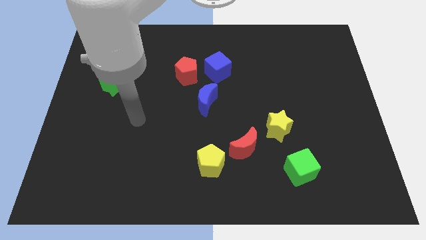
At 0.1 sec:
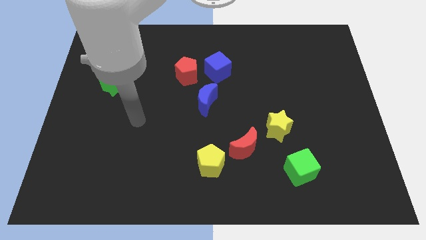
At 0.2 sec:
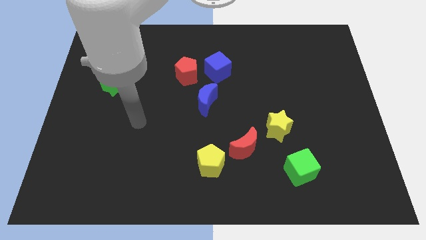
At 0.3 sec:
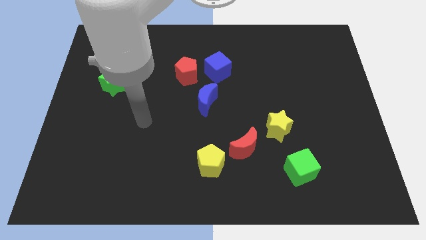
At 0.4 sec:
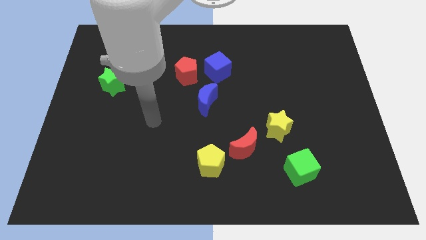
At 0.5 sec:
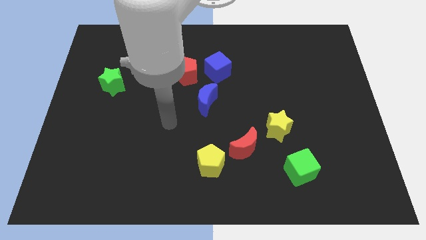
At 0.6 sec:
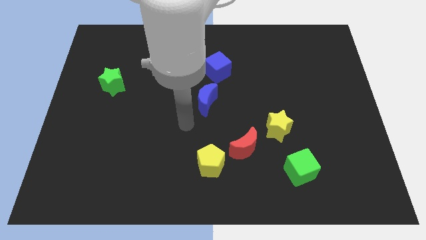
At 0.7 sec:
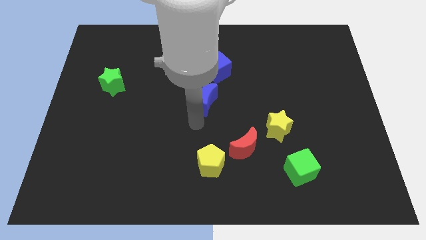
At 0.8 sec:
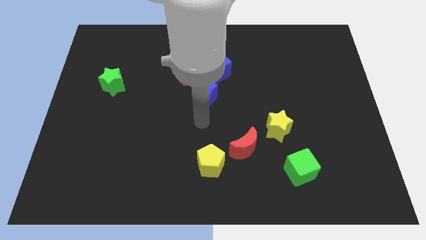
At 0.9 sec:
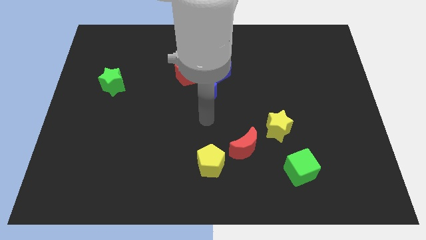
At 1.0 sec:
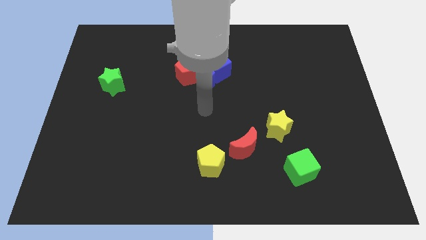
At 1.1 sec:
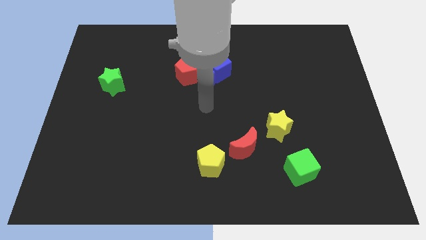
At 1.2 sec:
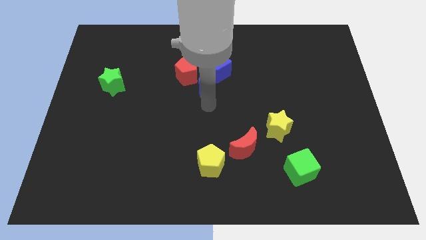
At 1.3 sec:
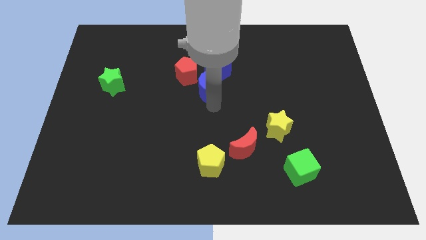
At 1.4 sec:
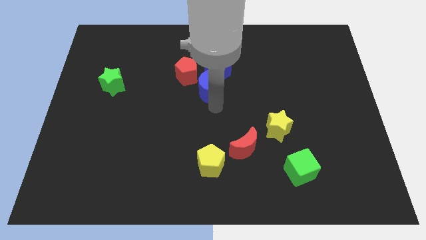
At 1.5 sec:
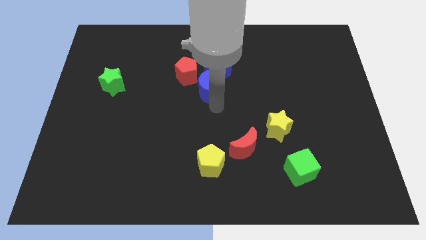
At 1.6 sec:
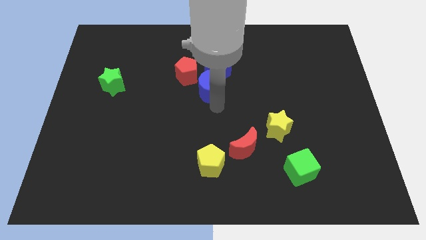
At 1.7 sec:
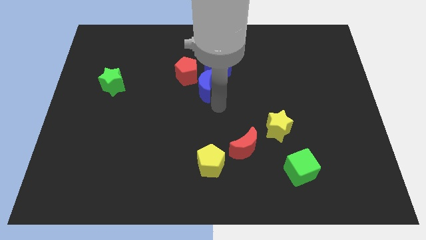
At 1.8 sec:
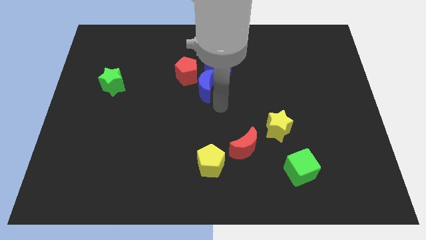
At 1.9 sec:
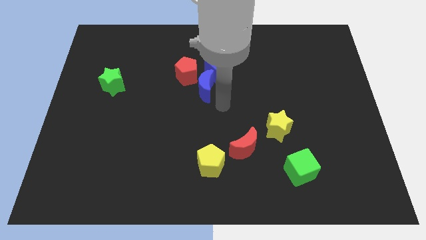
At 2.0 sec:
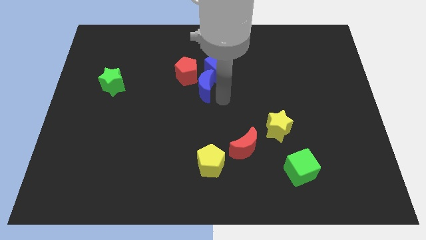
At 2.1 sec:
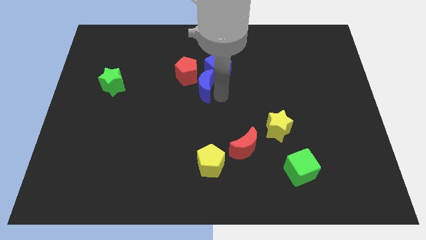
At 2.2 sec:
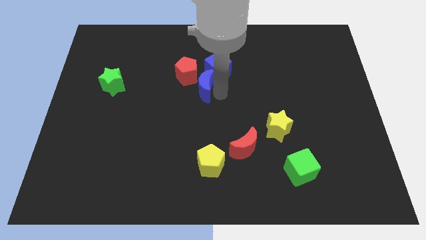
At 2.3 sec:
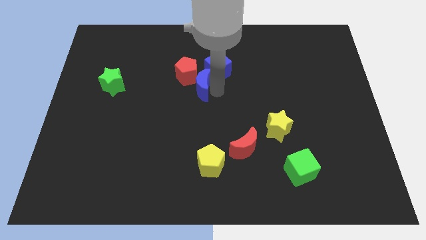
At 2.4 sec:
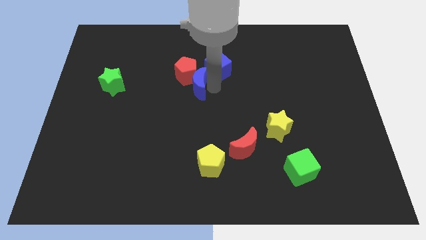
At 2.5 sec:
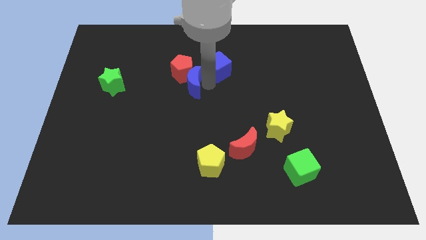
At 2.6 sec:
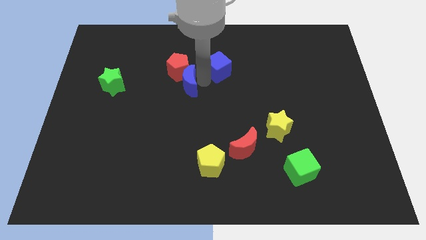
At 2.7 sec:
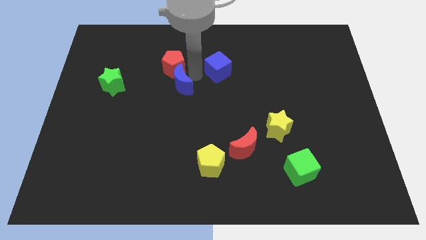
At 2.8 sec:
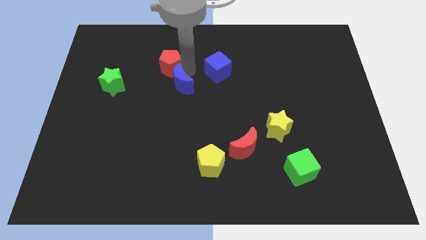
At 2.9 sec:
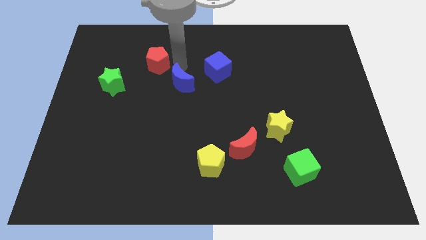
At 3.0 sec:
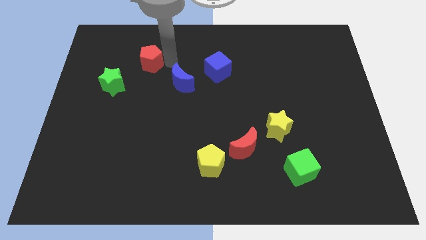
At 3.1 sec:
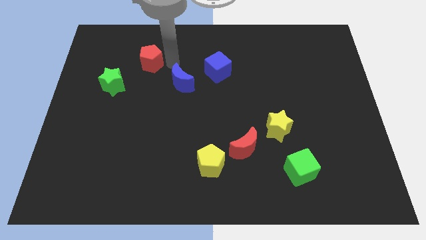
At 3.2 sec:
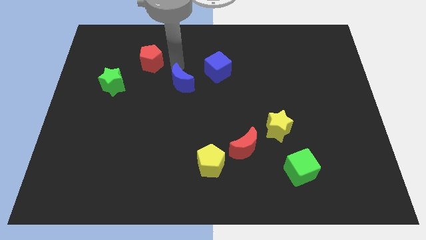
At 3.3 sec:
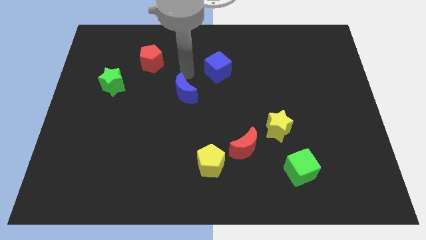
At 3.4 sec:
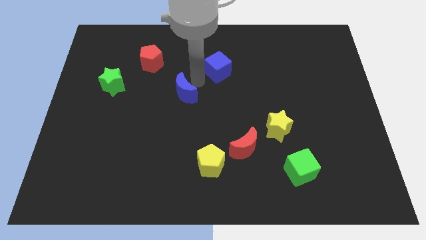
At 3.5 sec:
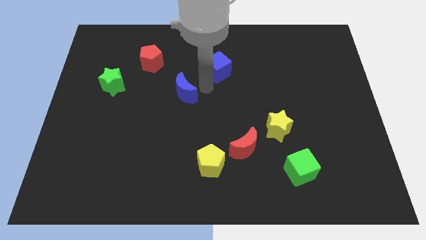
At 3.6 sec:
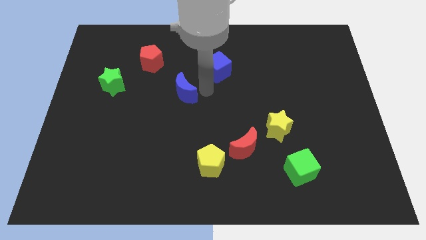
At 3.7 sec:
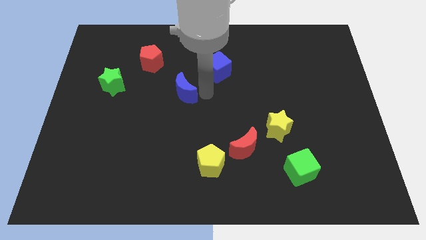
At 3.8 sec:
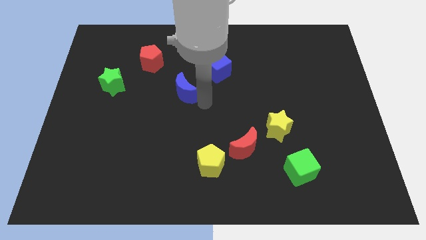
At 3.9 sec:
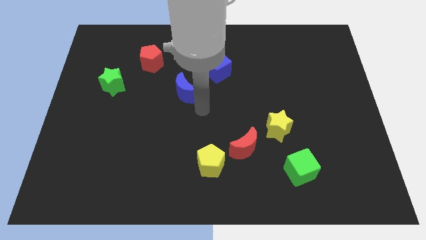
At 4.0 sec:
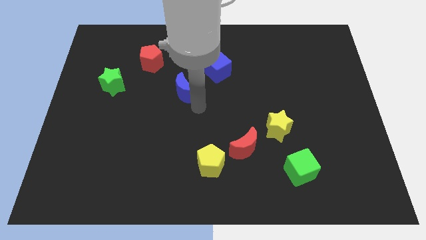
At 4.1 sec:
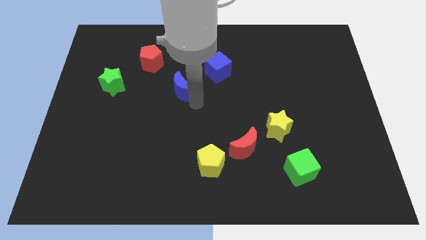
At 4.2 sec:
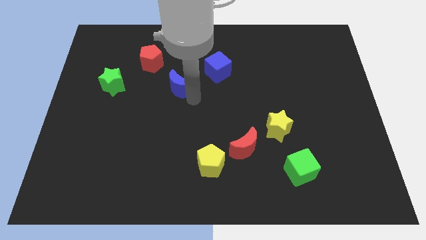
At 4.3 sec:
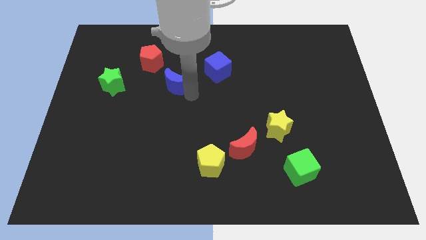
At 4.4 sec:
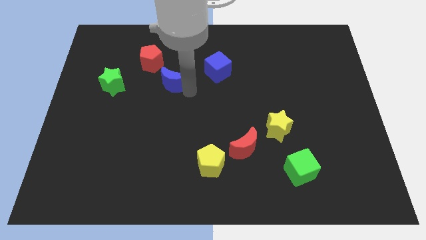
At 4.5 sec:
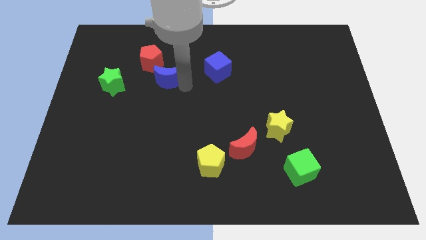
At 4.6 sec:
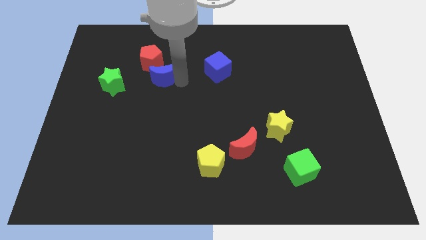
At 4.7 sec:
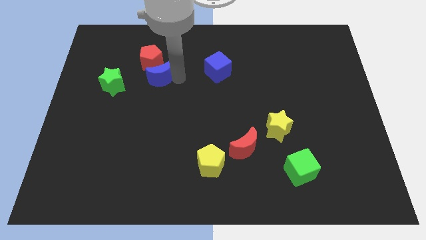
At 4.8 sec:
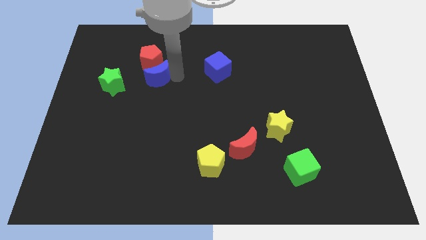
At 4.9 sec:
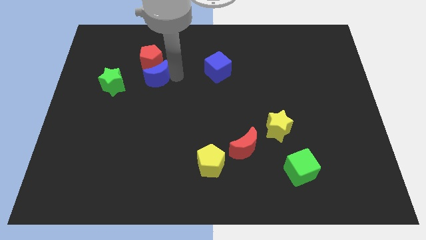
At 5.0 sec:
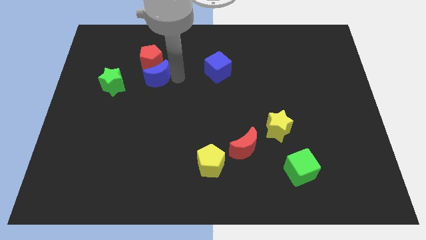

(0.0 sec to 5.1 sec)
move the blue moon and the red pentagon towards top

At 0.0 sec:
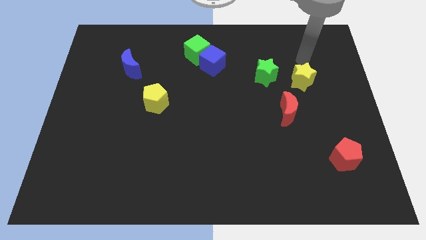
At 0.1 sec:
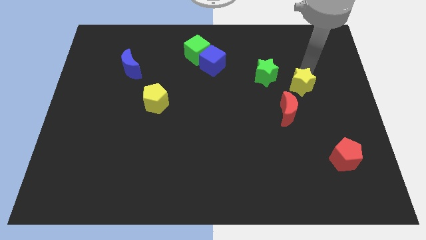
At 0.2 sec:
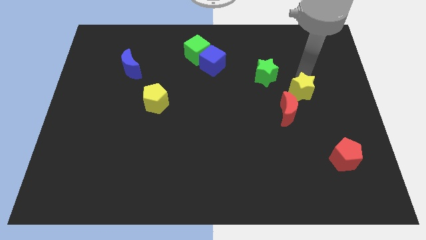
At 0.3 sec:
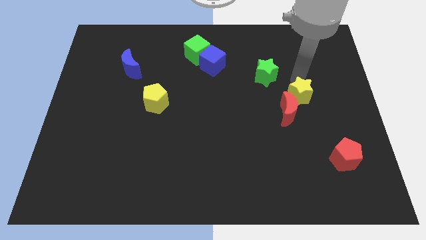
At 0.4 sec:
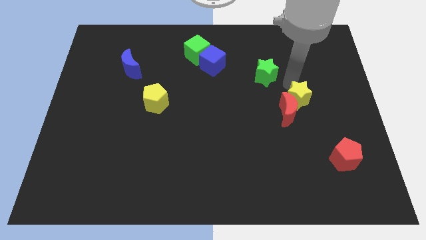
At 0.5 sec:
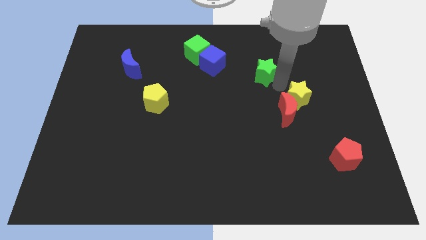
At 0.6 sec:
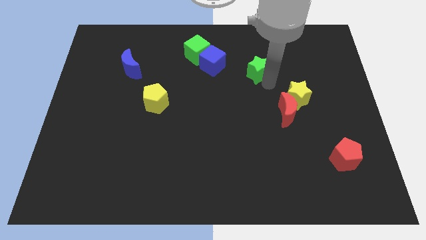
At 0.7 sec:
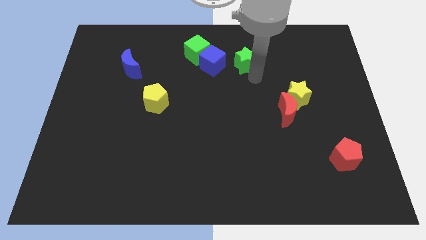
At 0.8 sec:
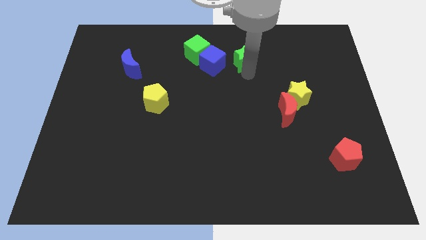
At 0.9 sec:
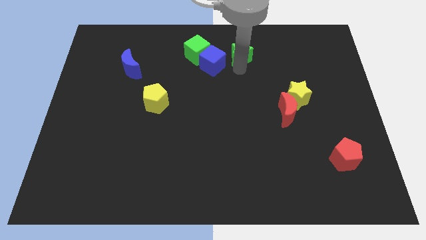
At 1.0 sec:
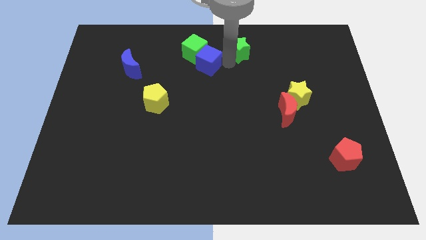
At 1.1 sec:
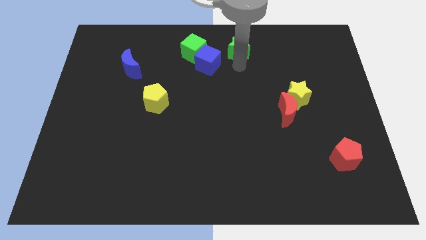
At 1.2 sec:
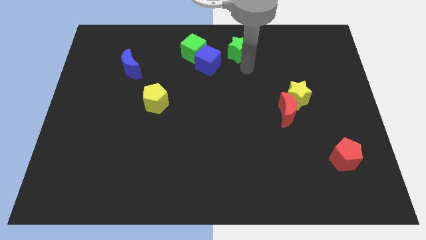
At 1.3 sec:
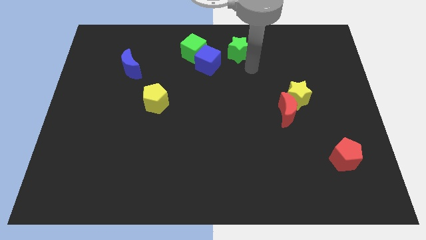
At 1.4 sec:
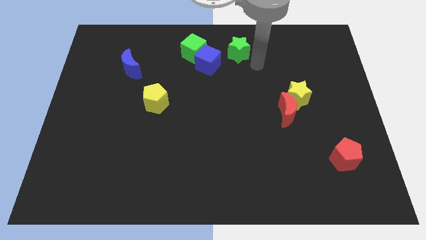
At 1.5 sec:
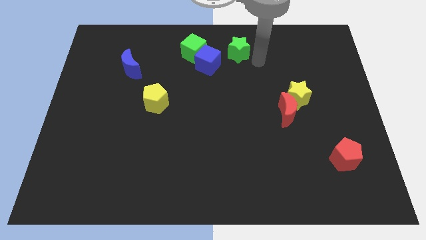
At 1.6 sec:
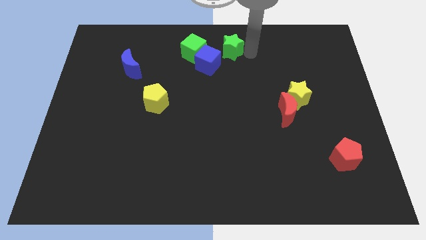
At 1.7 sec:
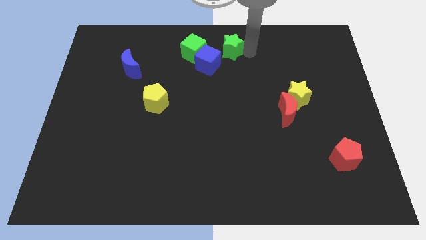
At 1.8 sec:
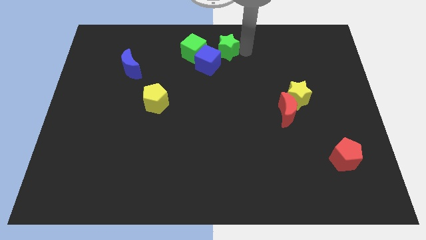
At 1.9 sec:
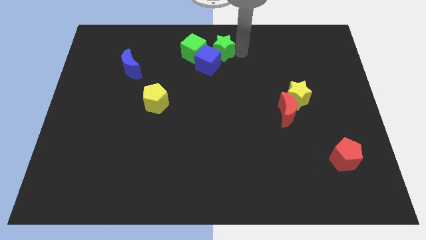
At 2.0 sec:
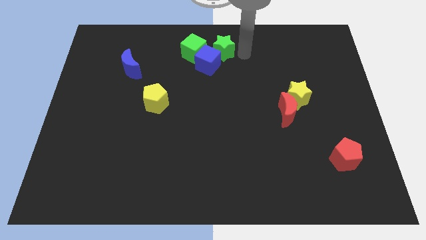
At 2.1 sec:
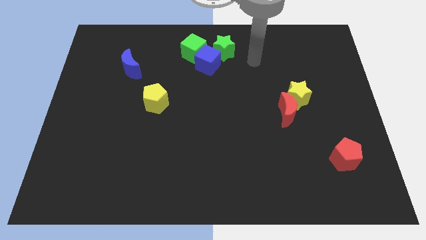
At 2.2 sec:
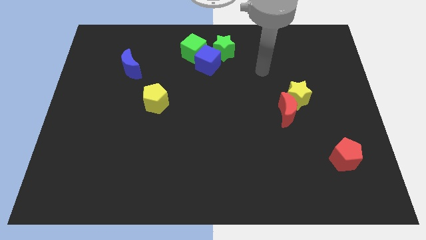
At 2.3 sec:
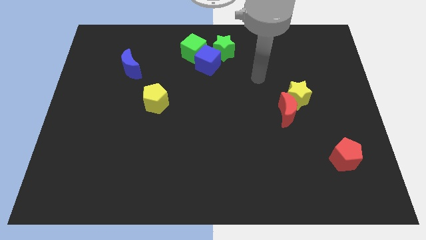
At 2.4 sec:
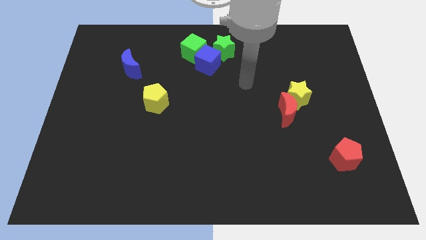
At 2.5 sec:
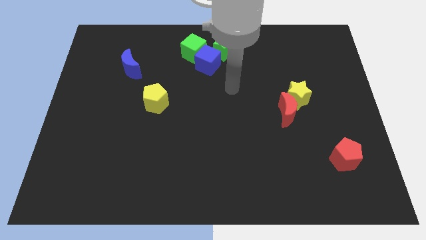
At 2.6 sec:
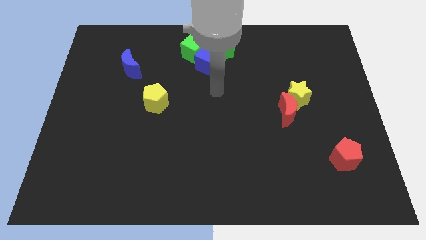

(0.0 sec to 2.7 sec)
push the yellow star slightly down

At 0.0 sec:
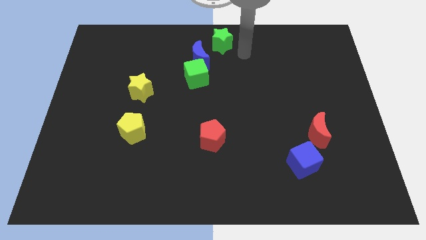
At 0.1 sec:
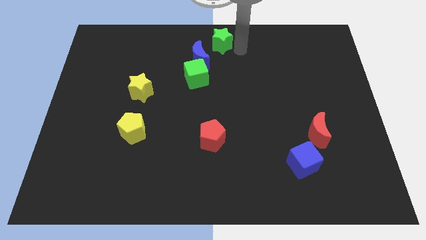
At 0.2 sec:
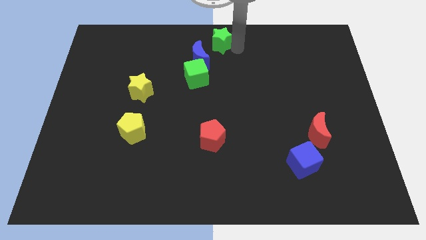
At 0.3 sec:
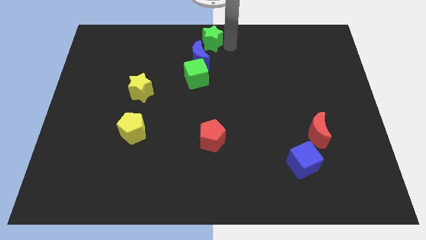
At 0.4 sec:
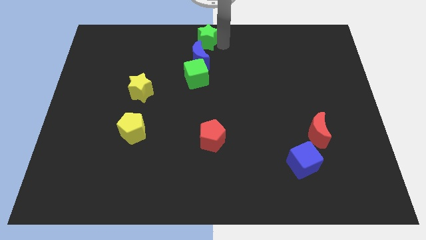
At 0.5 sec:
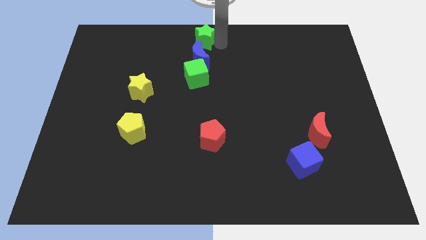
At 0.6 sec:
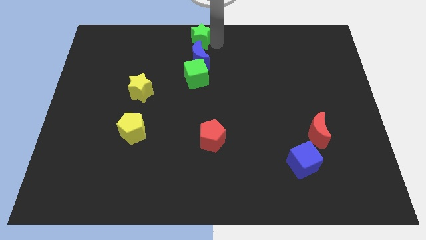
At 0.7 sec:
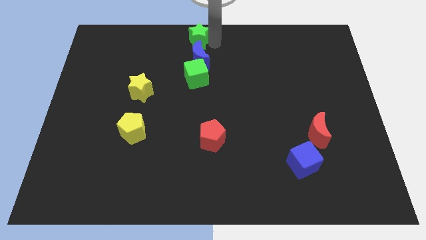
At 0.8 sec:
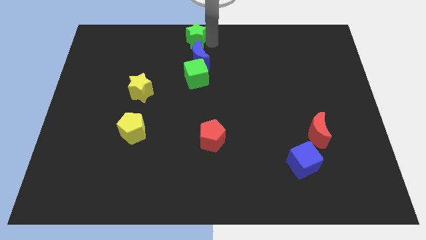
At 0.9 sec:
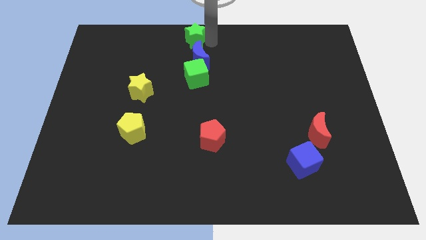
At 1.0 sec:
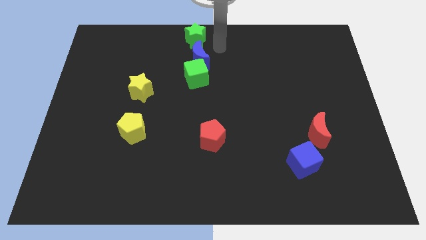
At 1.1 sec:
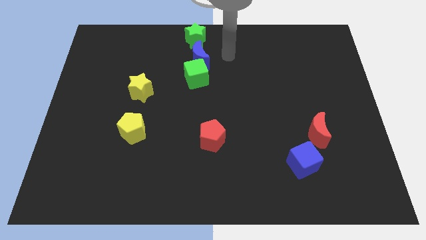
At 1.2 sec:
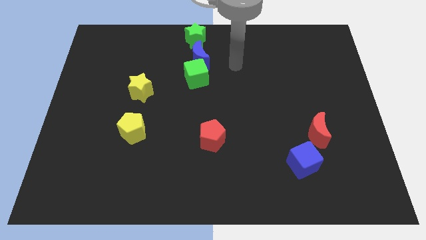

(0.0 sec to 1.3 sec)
move green star above blue crescent
